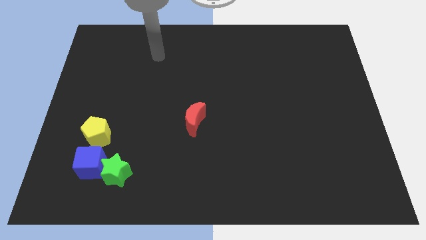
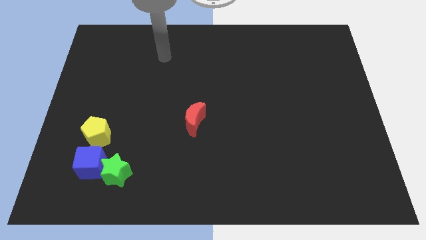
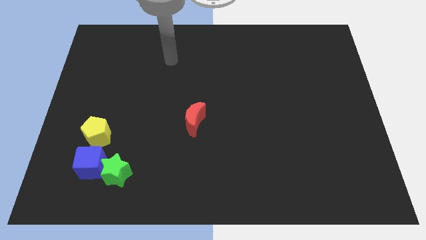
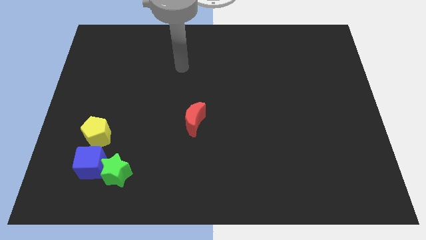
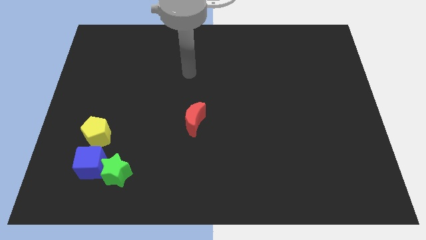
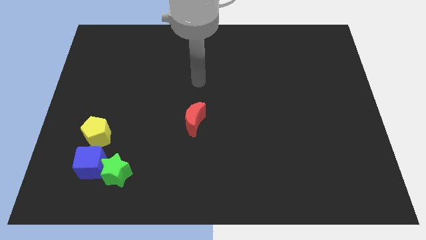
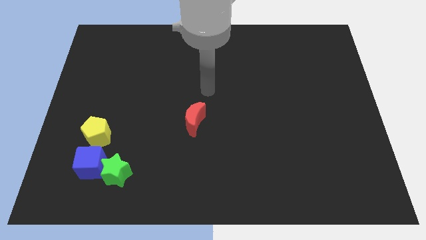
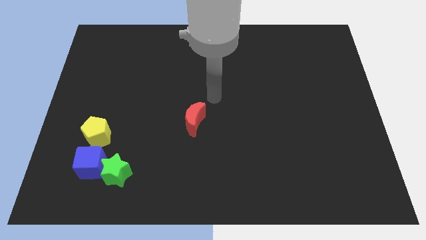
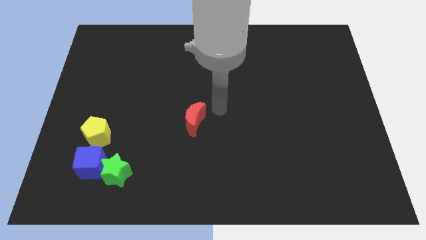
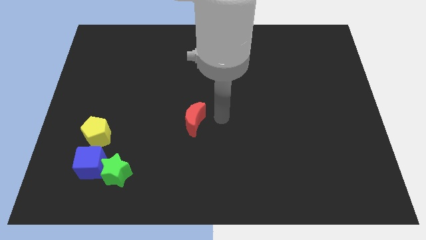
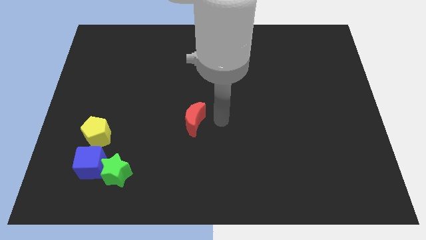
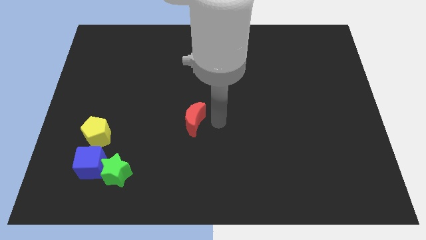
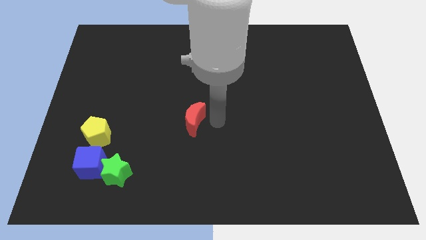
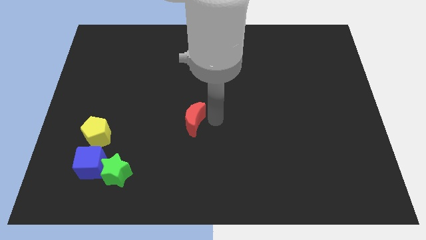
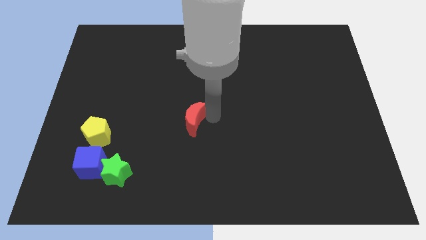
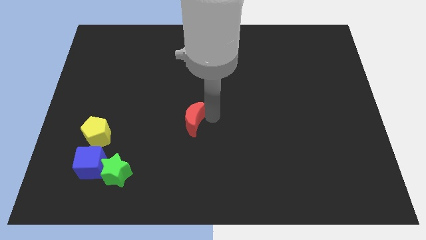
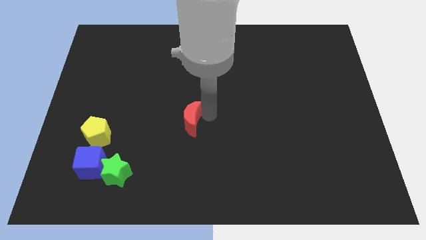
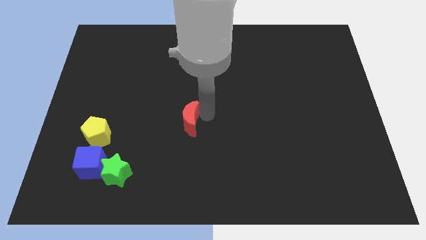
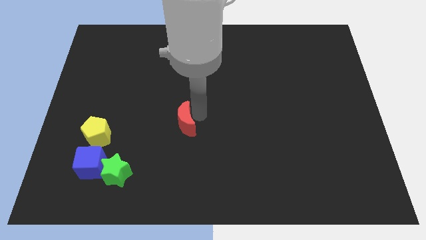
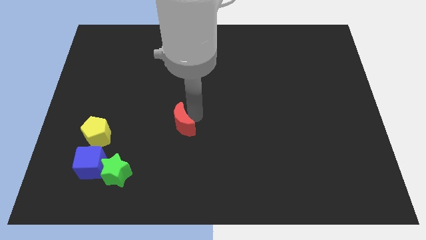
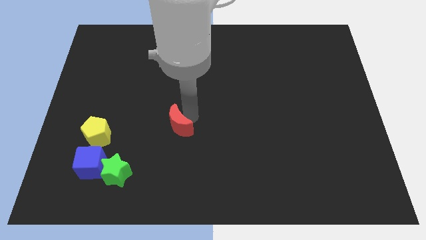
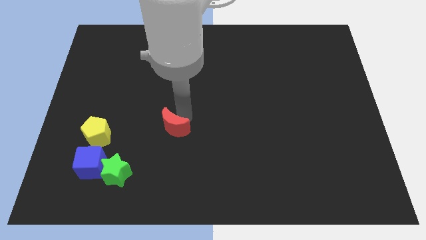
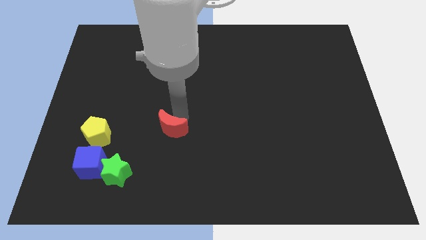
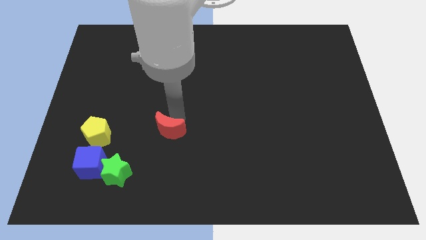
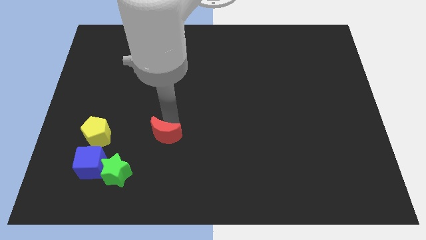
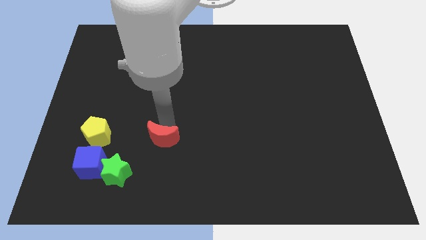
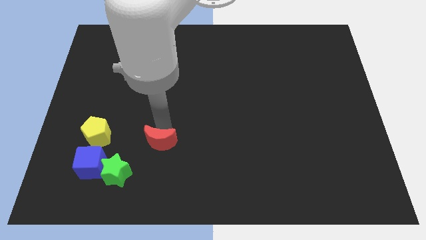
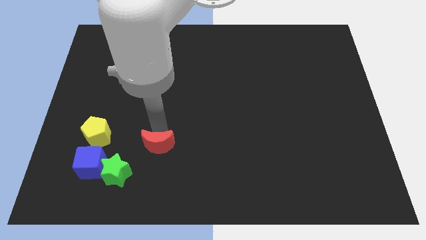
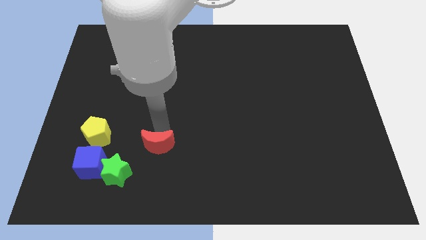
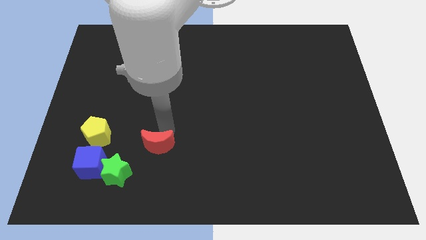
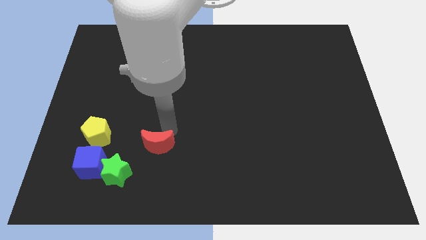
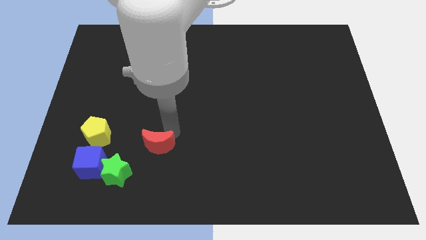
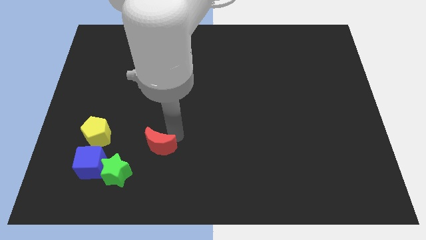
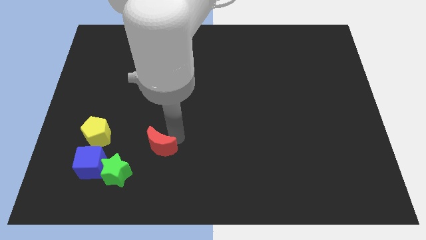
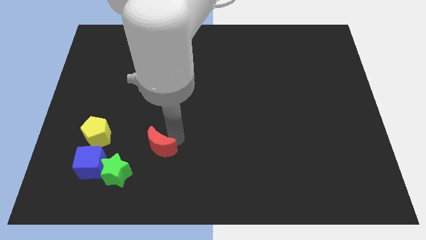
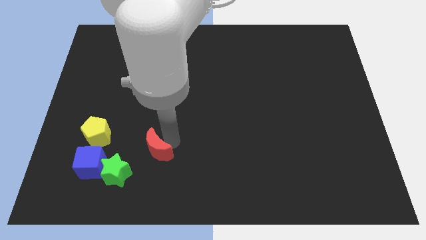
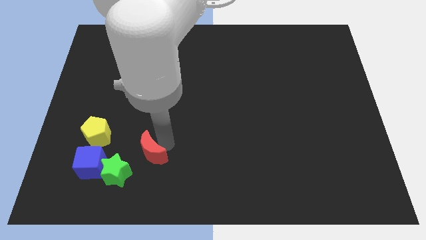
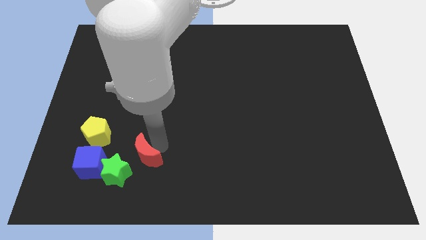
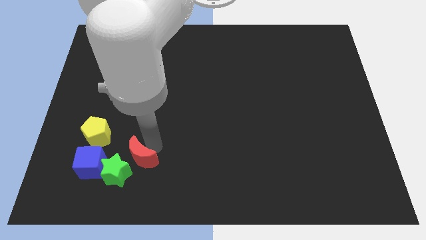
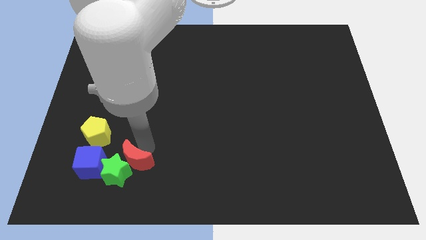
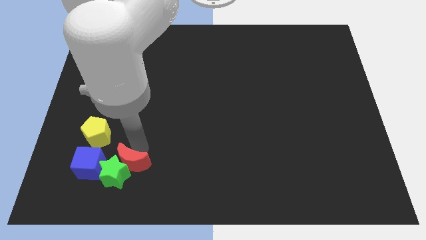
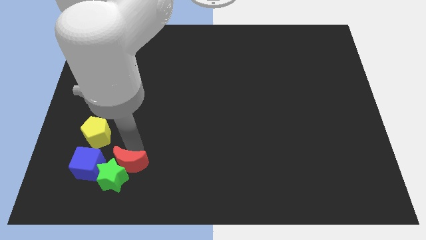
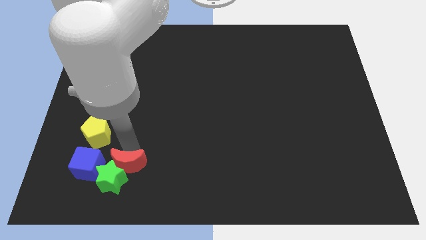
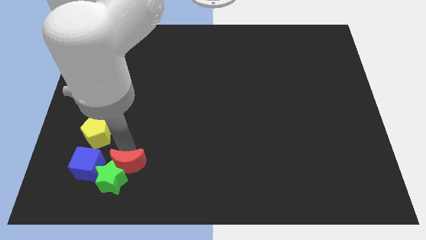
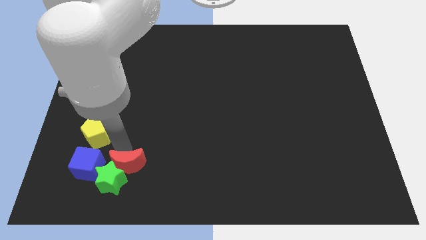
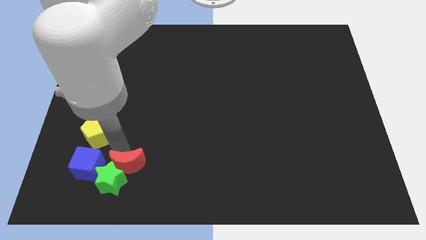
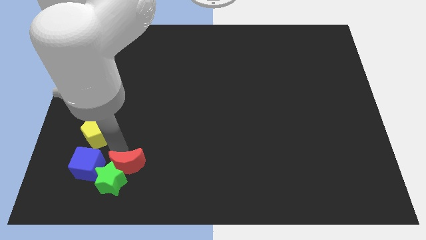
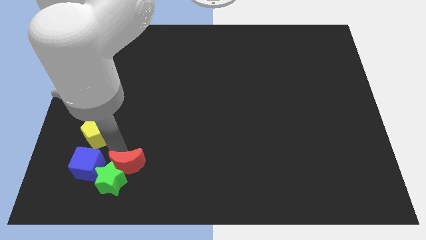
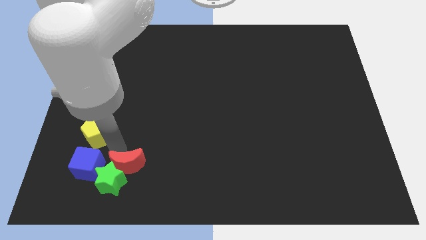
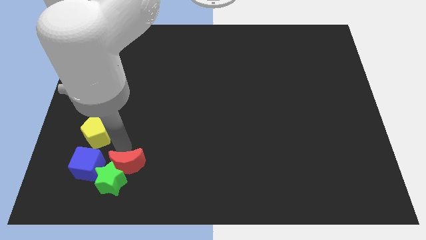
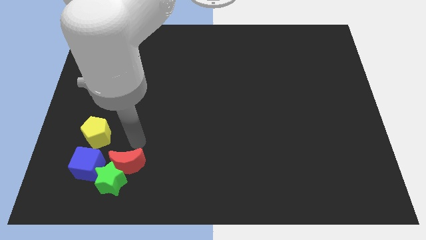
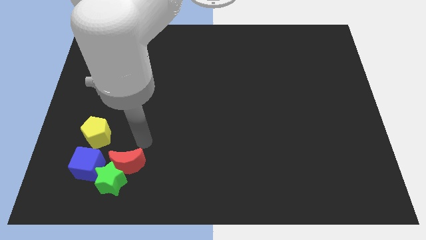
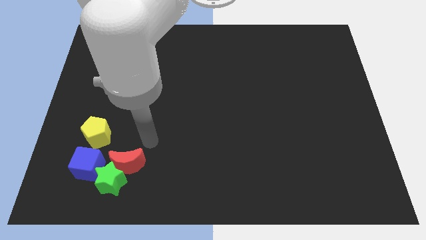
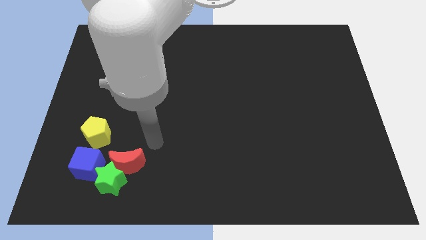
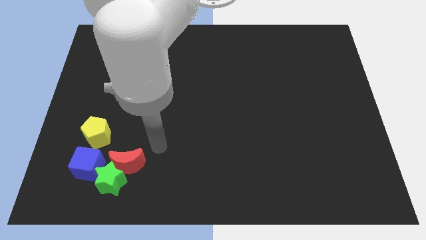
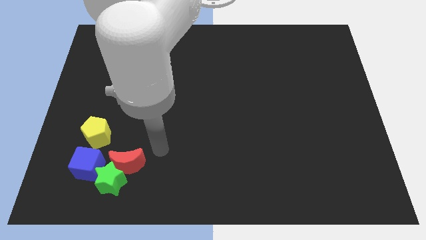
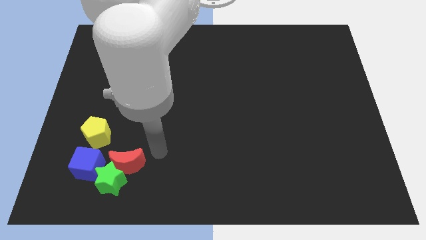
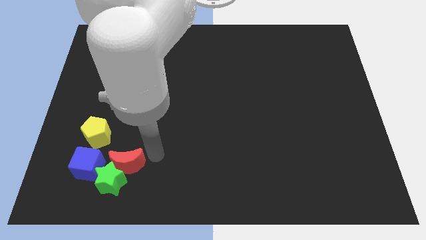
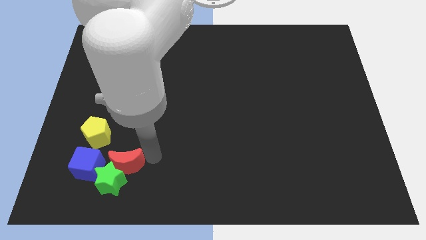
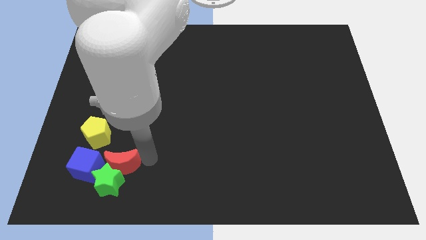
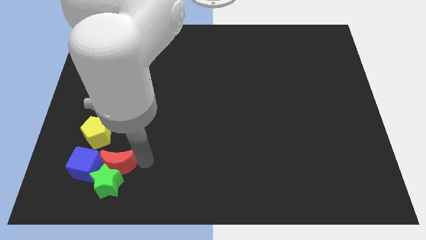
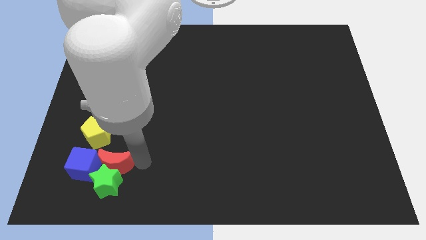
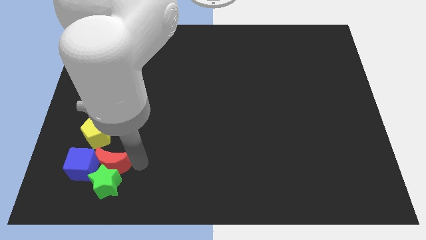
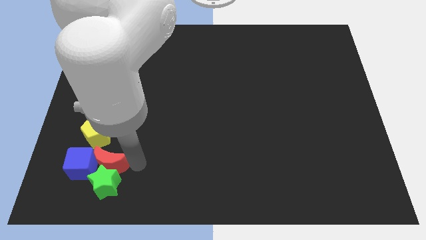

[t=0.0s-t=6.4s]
push the red block close to the blue cube

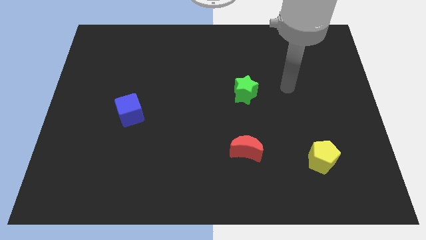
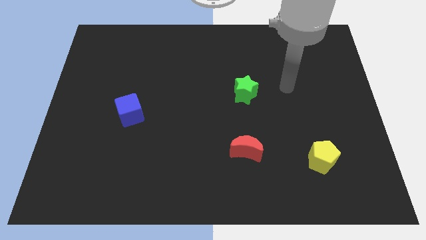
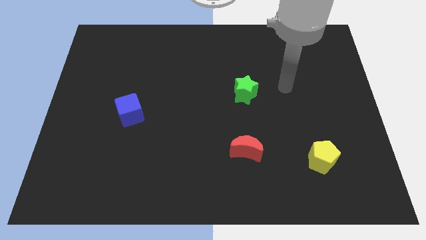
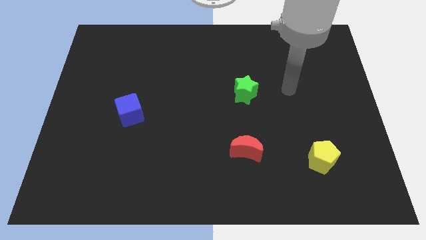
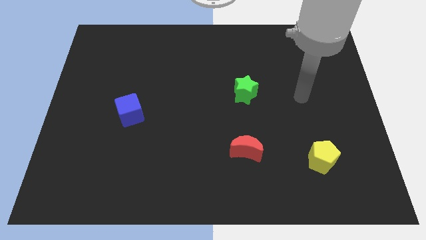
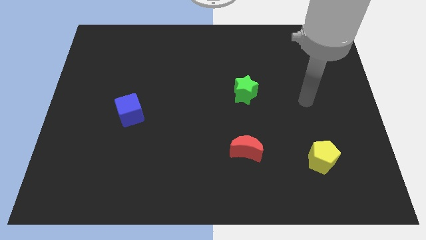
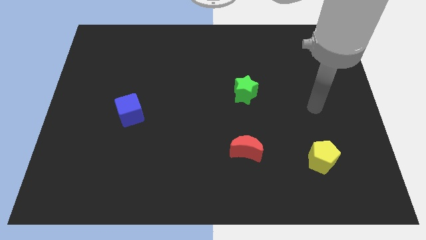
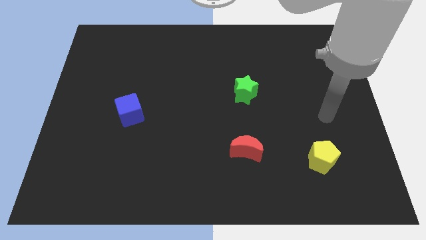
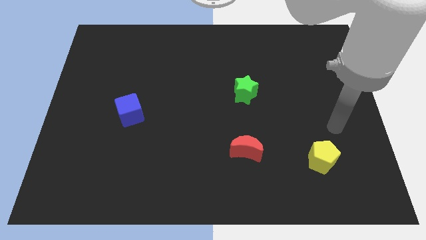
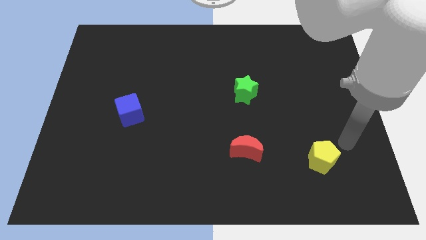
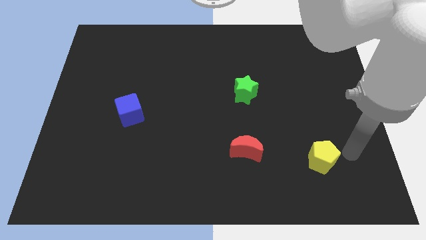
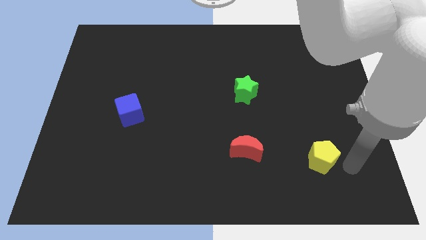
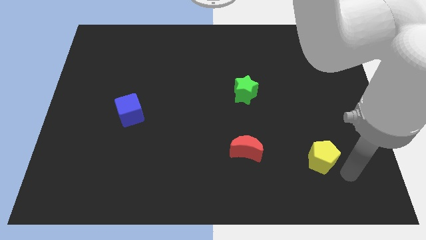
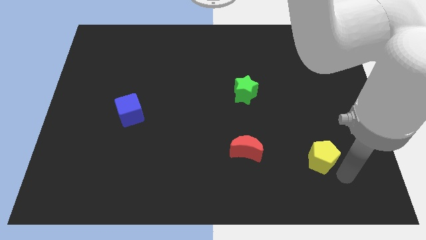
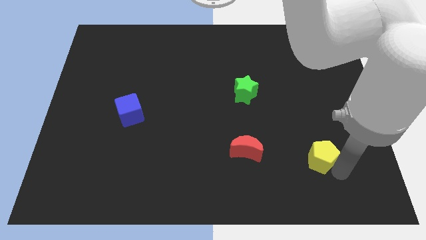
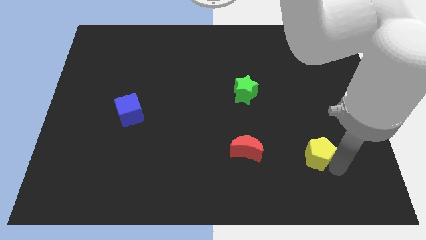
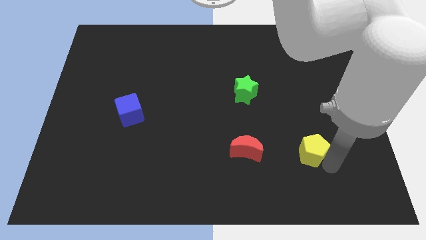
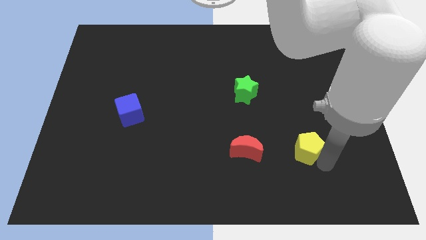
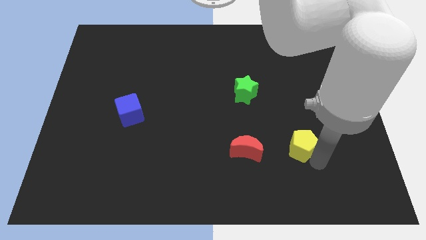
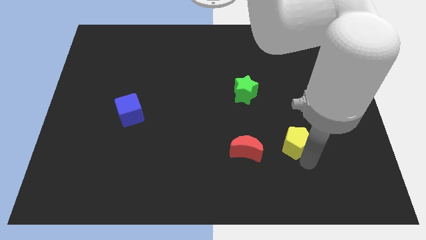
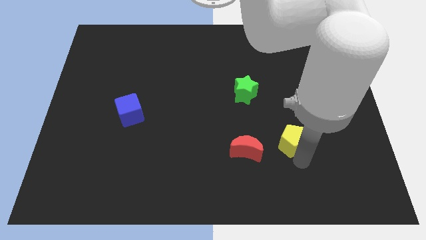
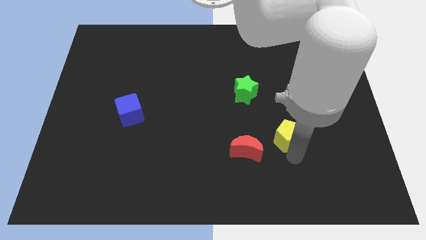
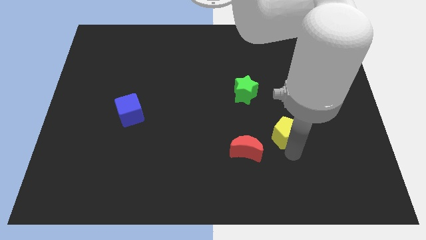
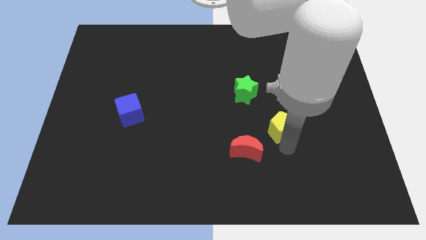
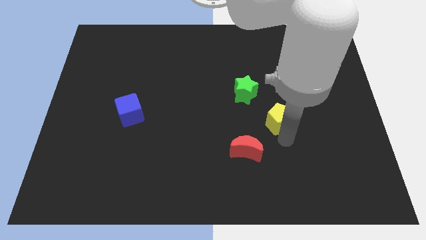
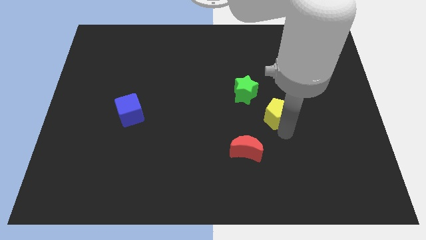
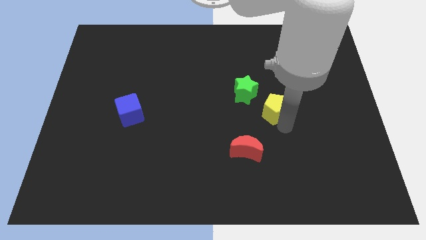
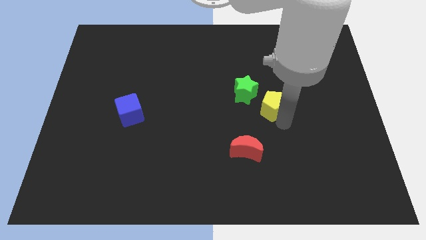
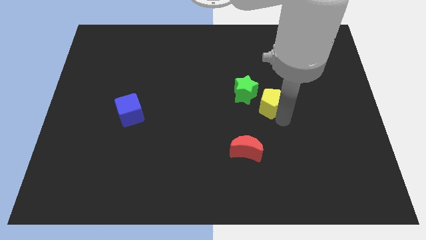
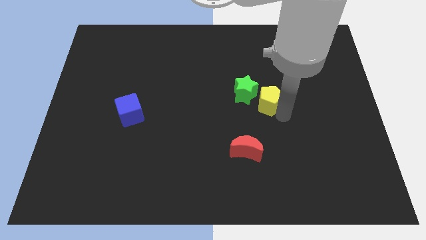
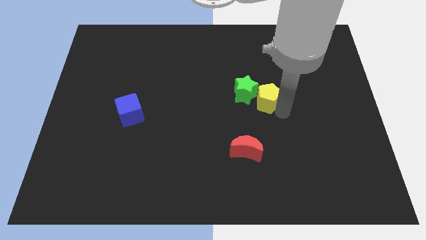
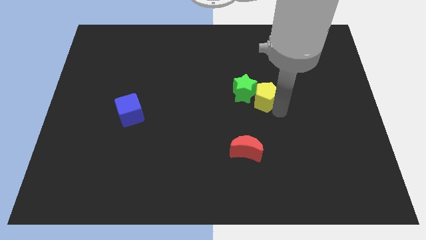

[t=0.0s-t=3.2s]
push the yellow pentagon to the star
